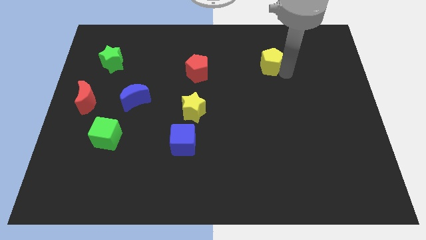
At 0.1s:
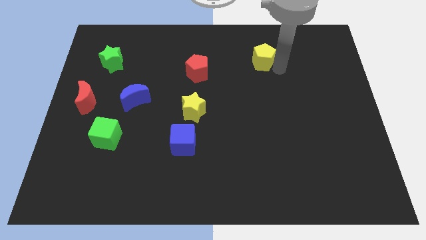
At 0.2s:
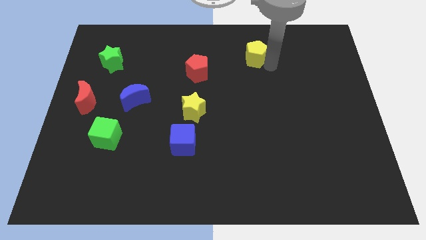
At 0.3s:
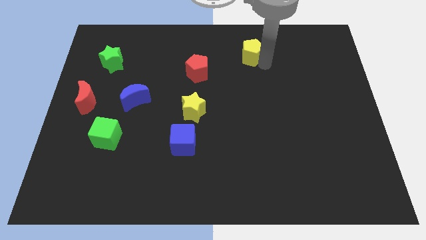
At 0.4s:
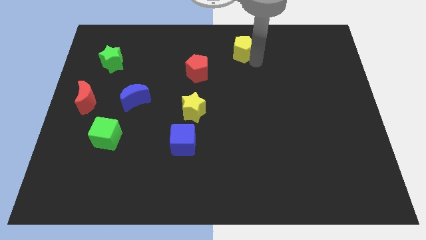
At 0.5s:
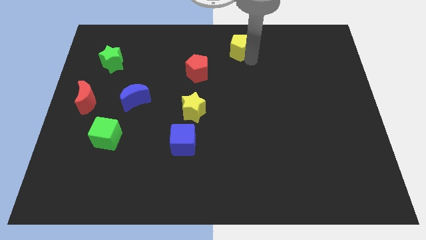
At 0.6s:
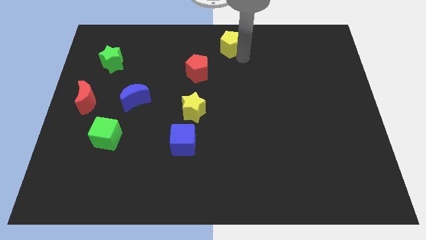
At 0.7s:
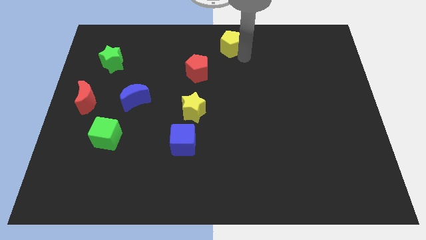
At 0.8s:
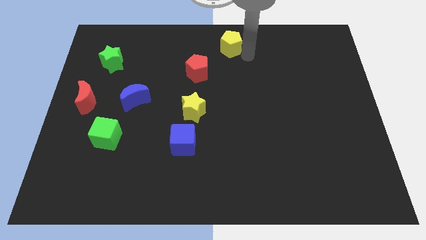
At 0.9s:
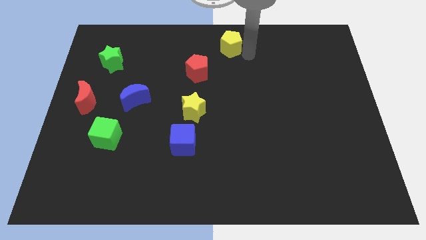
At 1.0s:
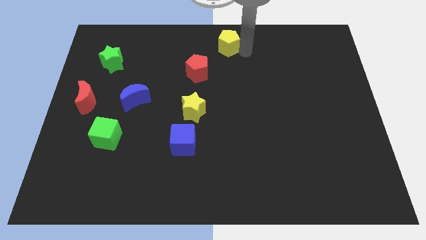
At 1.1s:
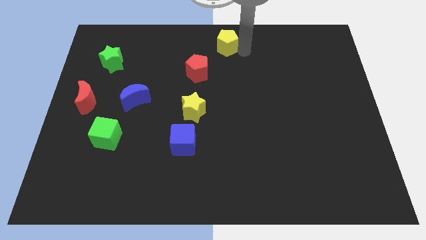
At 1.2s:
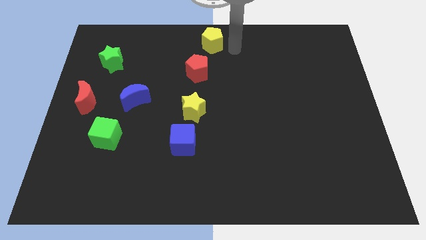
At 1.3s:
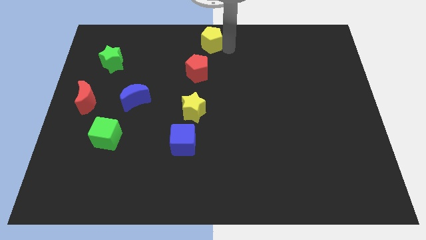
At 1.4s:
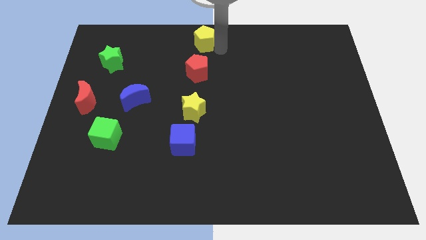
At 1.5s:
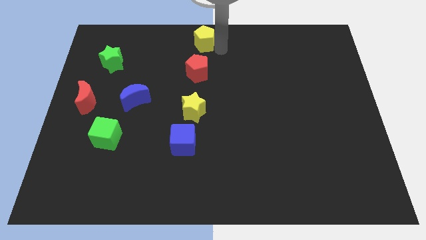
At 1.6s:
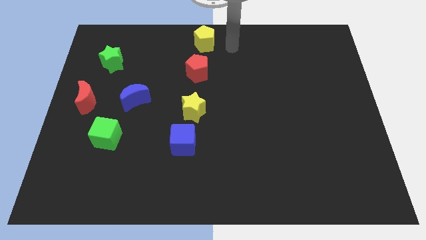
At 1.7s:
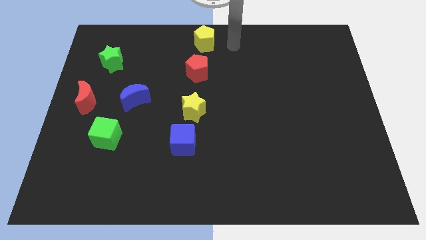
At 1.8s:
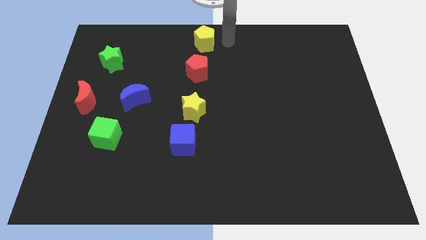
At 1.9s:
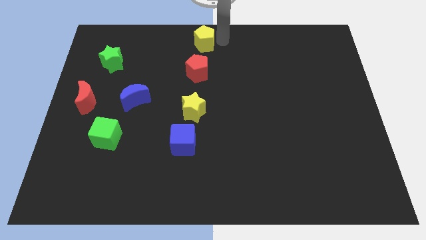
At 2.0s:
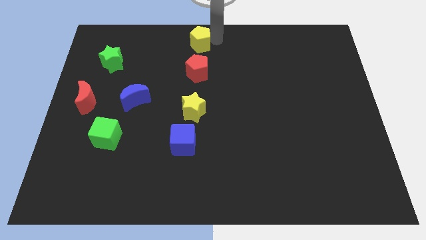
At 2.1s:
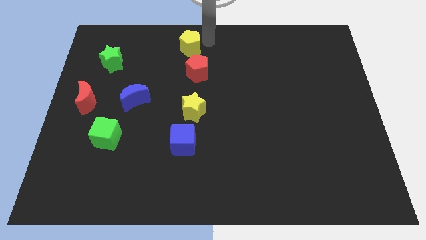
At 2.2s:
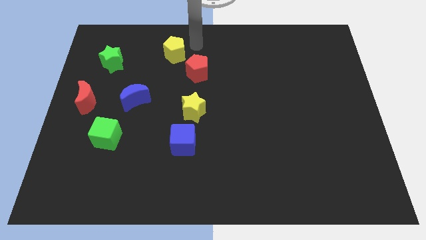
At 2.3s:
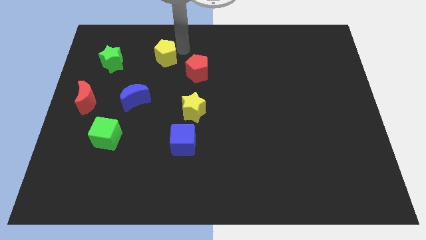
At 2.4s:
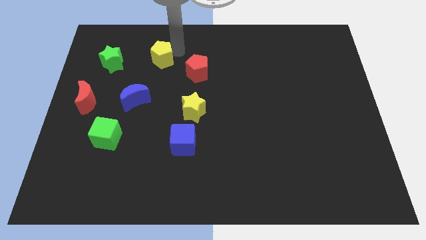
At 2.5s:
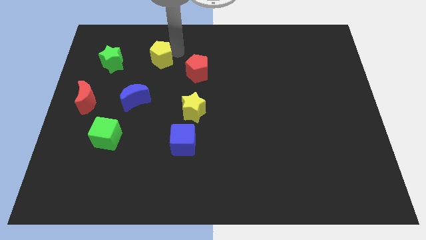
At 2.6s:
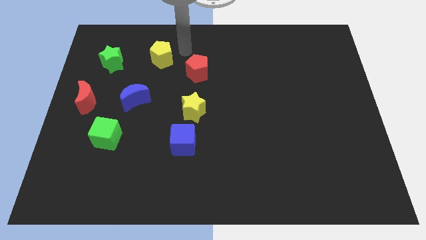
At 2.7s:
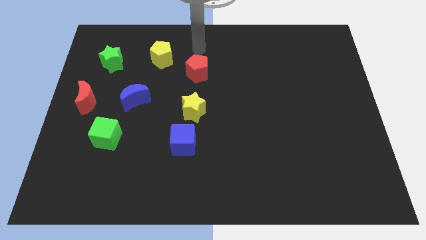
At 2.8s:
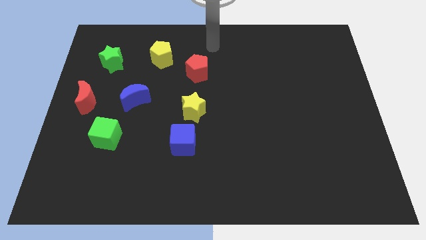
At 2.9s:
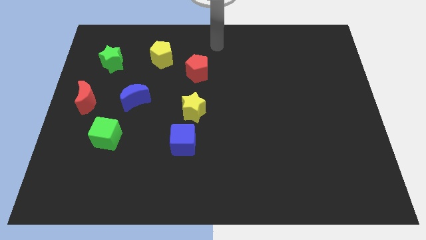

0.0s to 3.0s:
move the yellow pentagon to the top of red pentagon

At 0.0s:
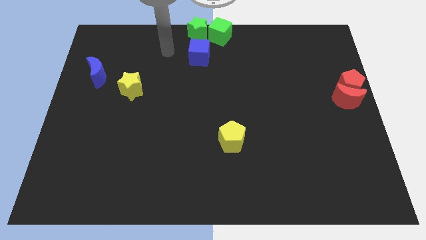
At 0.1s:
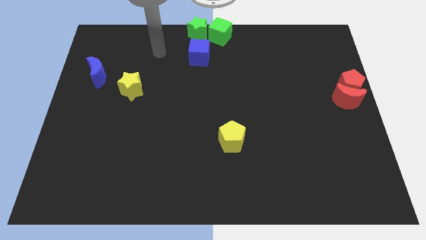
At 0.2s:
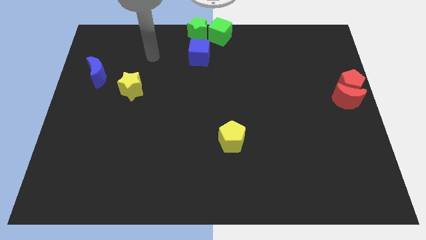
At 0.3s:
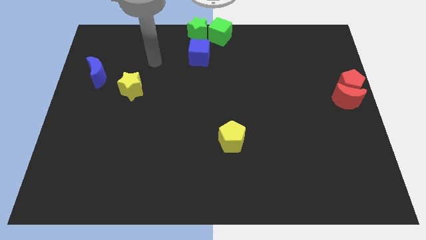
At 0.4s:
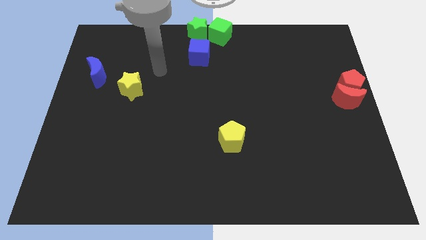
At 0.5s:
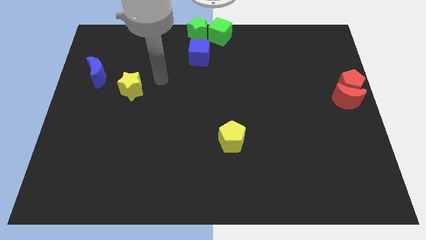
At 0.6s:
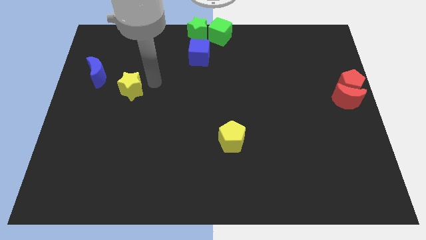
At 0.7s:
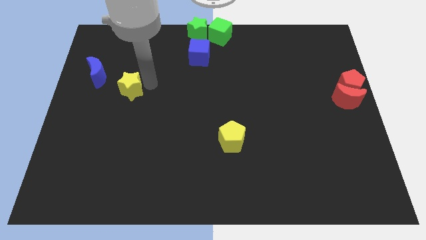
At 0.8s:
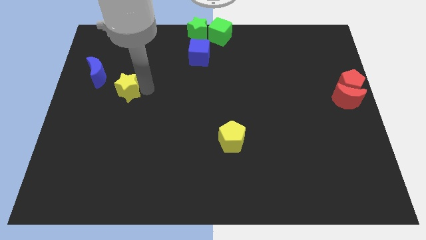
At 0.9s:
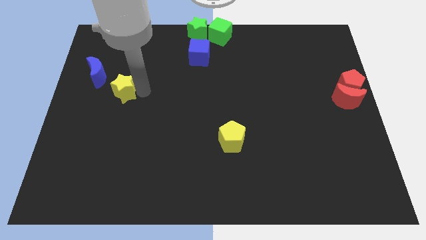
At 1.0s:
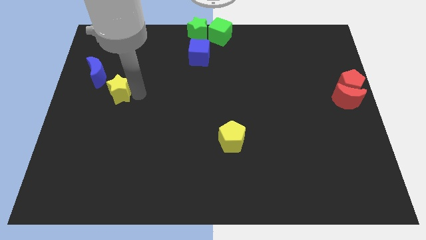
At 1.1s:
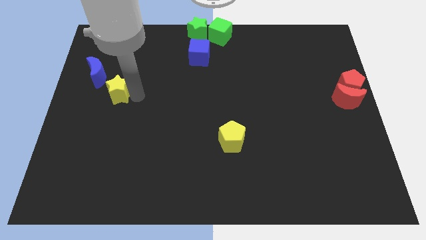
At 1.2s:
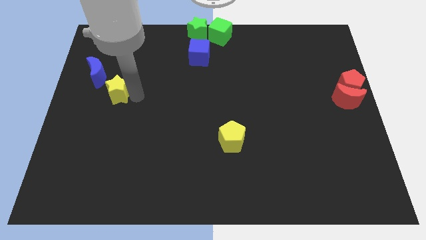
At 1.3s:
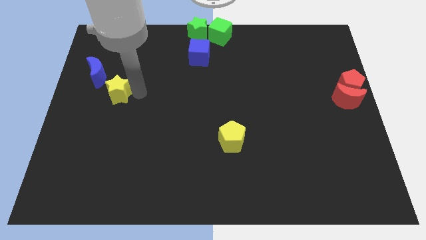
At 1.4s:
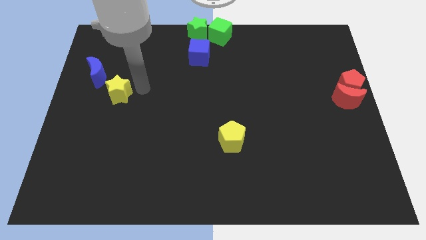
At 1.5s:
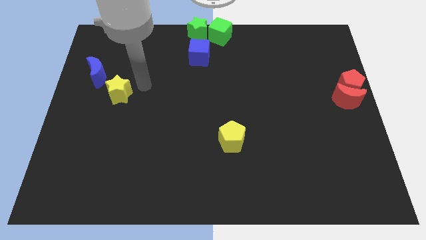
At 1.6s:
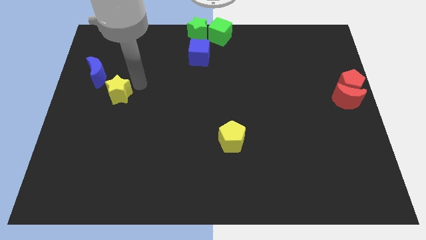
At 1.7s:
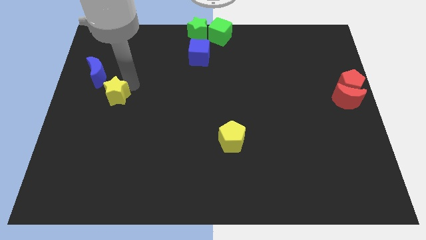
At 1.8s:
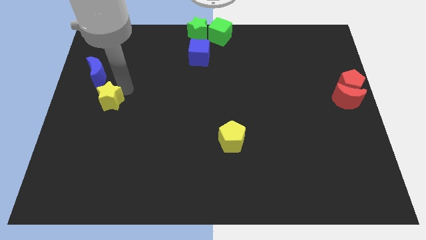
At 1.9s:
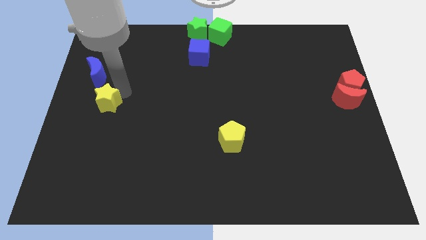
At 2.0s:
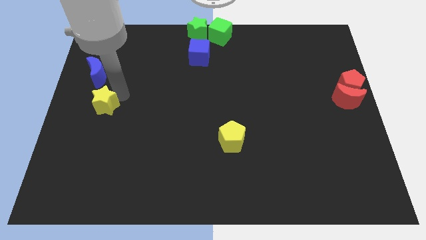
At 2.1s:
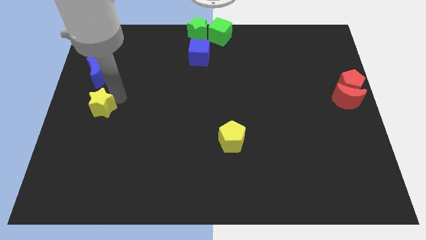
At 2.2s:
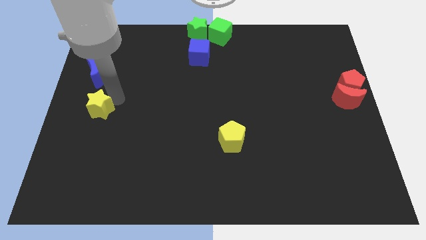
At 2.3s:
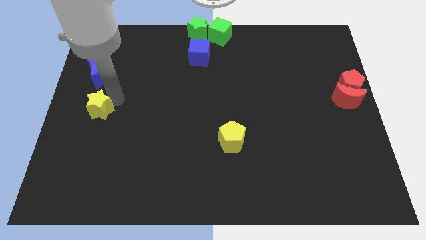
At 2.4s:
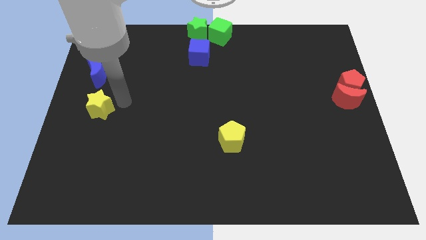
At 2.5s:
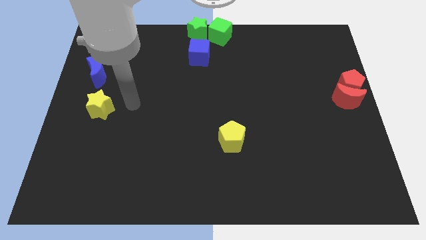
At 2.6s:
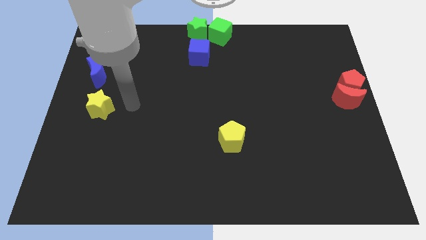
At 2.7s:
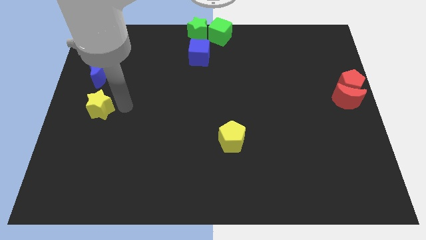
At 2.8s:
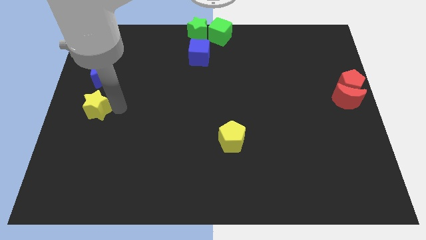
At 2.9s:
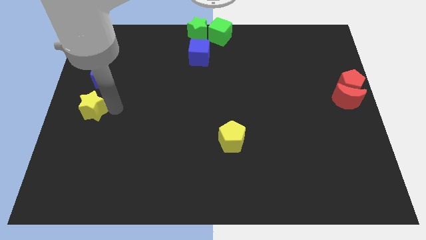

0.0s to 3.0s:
move the yellow star to the bottom of the blue crescent

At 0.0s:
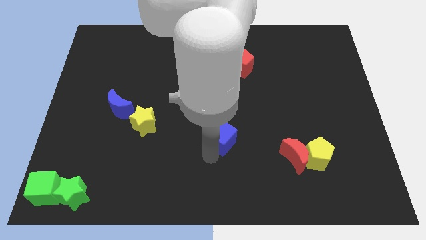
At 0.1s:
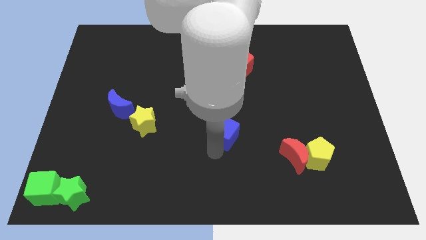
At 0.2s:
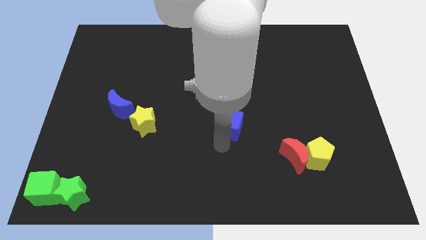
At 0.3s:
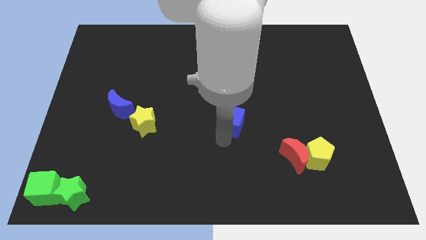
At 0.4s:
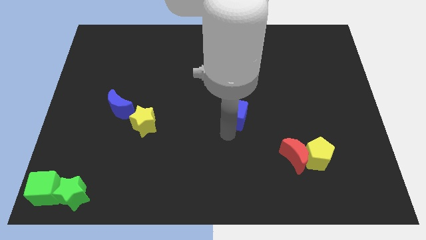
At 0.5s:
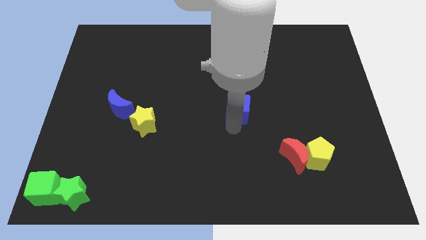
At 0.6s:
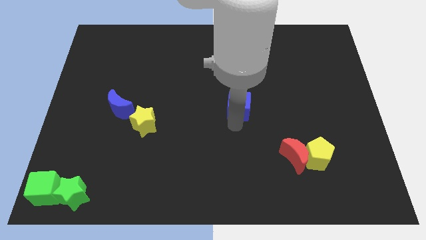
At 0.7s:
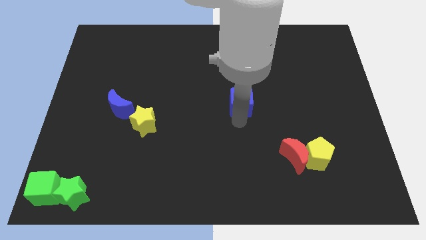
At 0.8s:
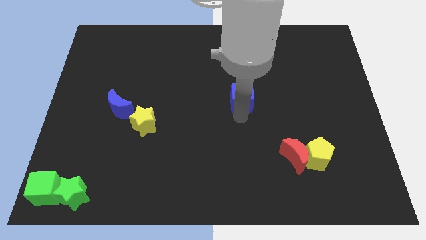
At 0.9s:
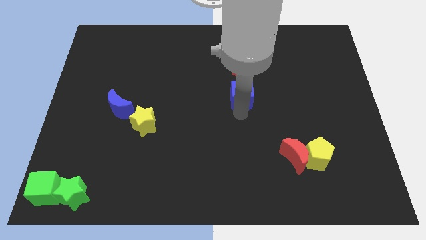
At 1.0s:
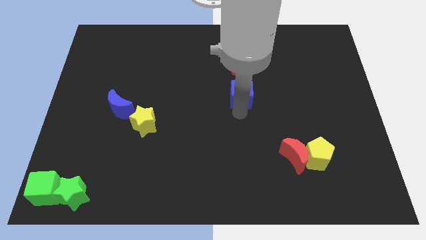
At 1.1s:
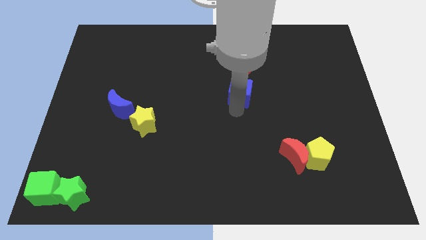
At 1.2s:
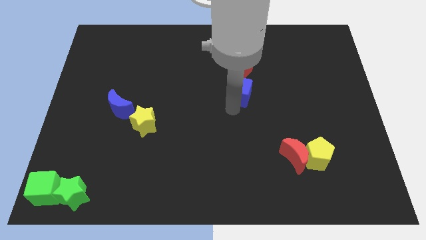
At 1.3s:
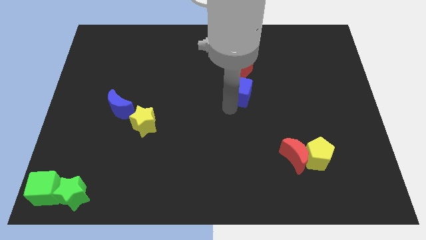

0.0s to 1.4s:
move the blue cube to the bottom of the red pentagon

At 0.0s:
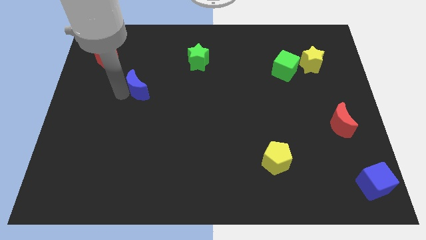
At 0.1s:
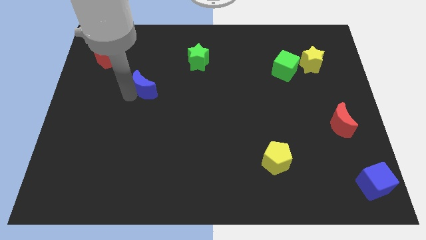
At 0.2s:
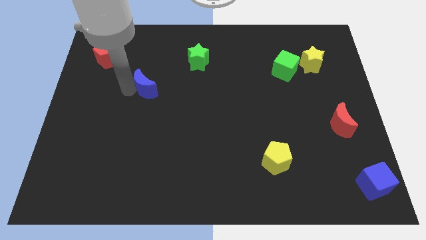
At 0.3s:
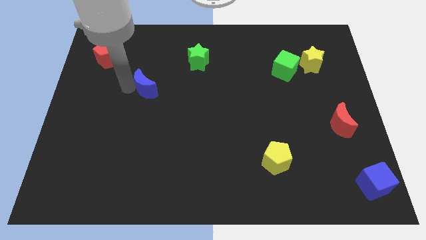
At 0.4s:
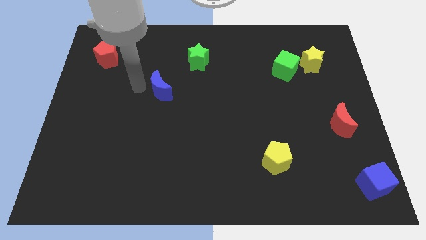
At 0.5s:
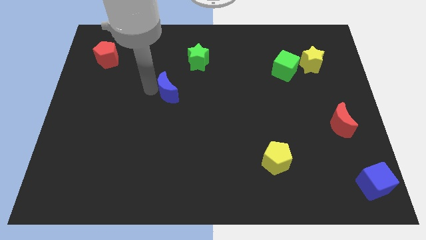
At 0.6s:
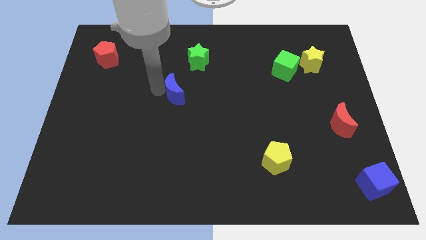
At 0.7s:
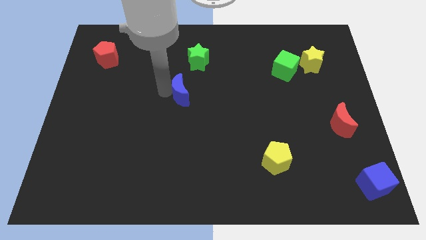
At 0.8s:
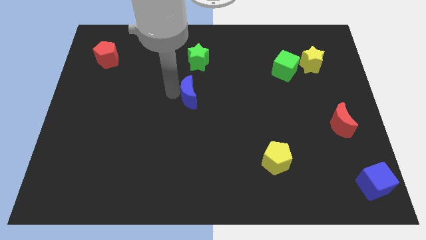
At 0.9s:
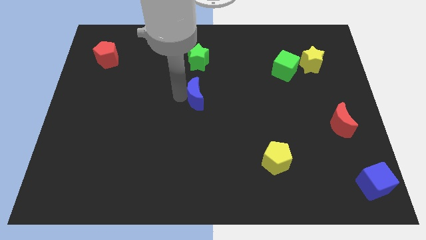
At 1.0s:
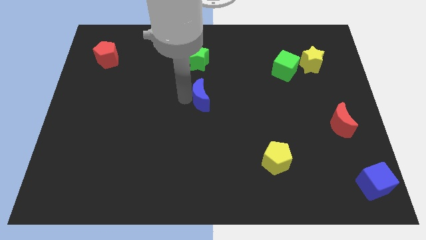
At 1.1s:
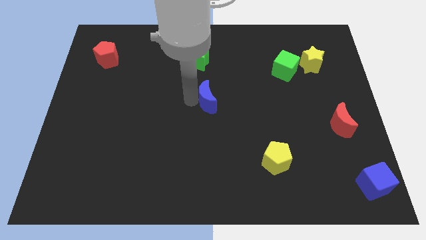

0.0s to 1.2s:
push the blue crescent to the bottom of the green star

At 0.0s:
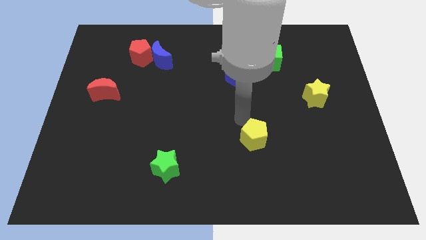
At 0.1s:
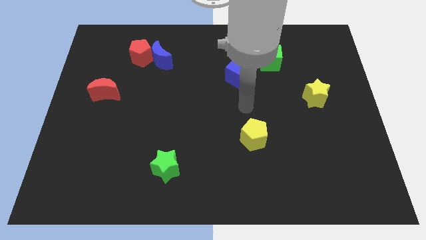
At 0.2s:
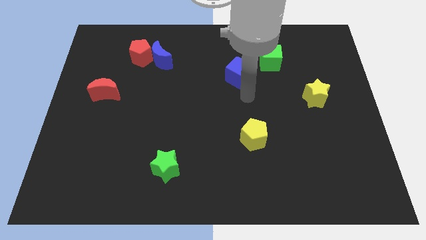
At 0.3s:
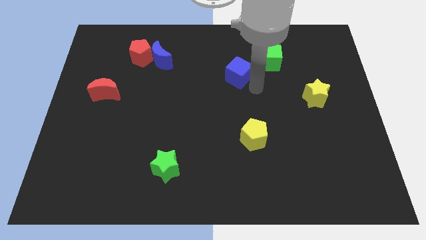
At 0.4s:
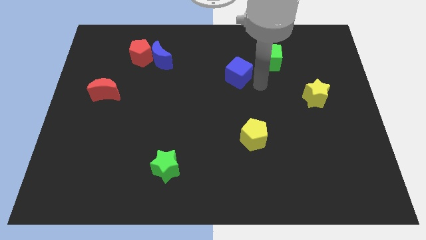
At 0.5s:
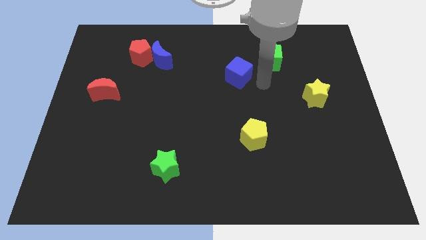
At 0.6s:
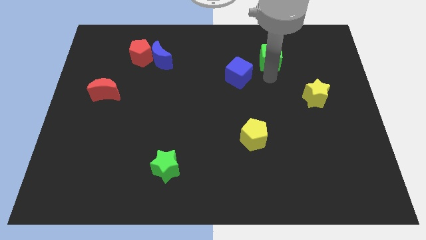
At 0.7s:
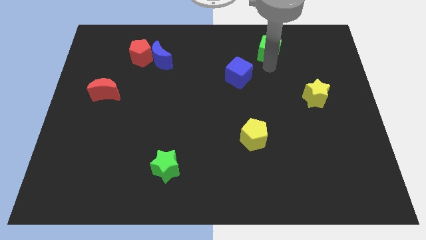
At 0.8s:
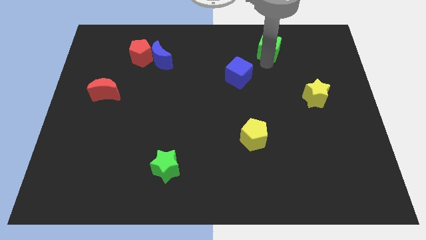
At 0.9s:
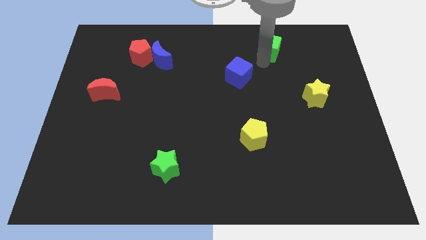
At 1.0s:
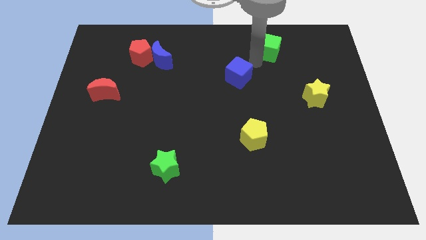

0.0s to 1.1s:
move the green cube slightly upwards
